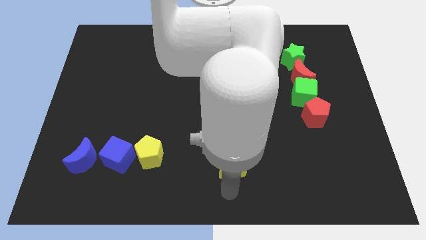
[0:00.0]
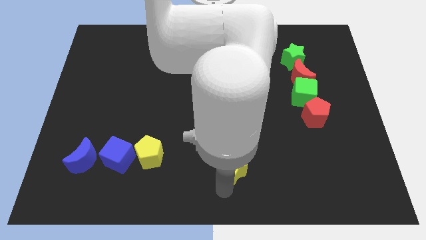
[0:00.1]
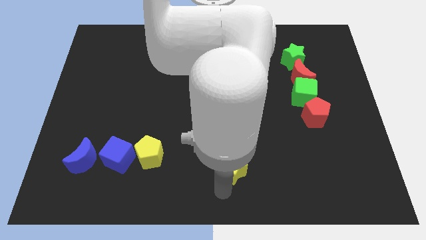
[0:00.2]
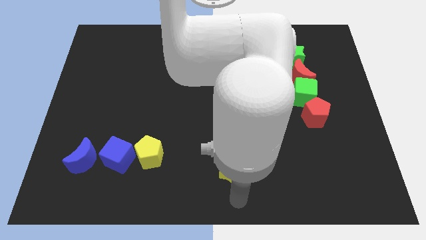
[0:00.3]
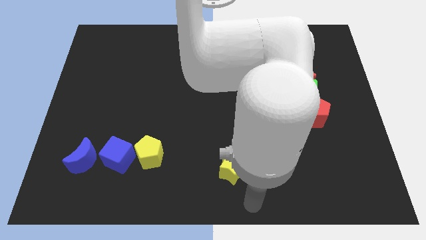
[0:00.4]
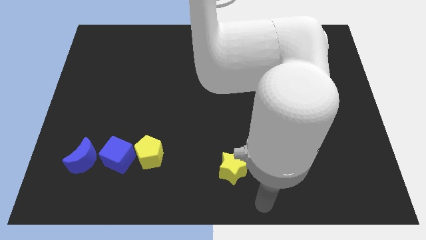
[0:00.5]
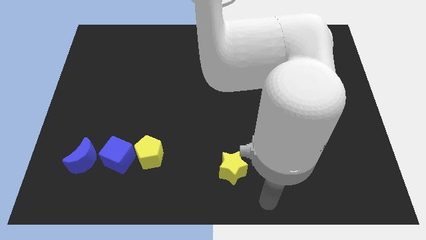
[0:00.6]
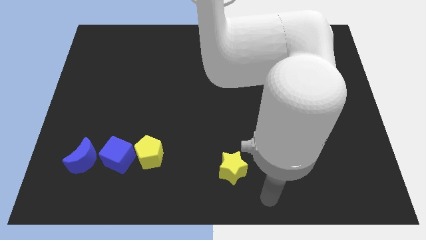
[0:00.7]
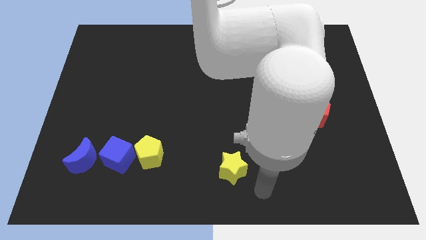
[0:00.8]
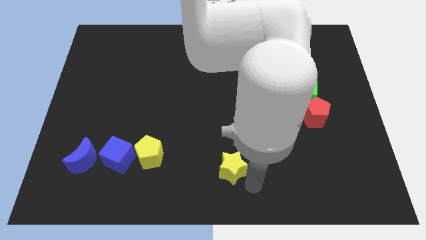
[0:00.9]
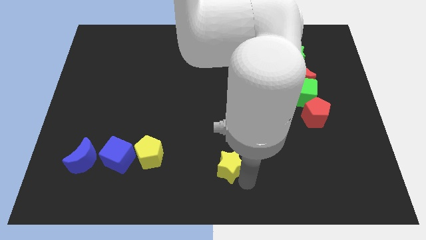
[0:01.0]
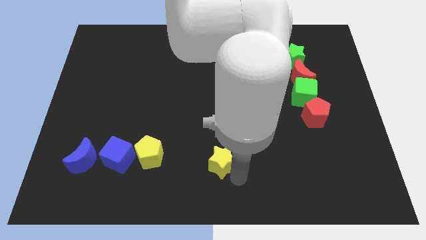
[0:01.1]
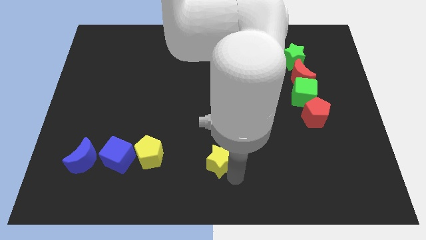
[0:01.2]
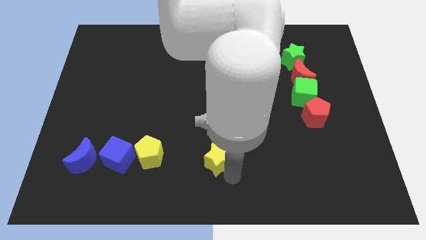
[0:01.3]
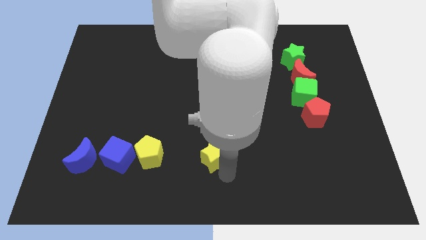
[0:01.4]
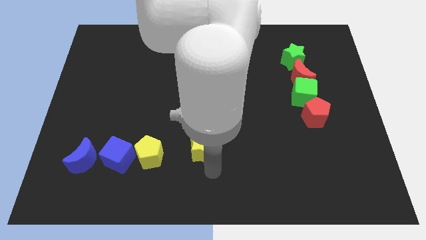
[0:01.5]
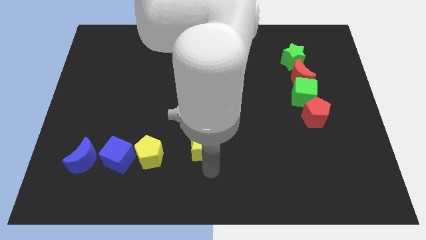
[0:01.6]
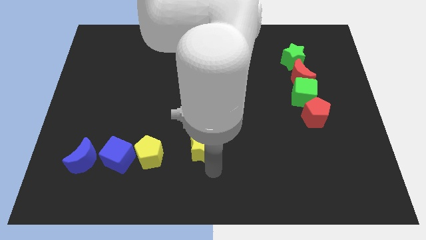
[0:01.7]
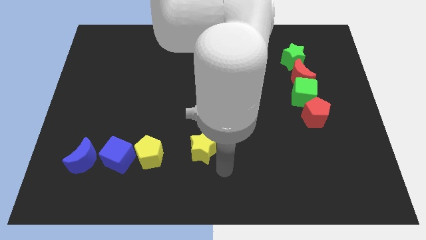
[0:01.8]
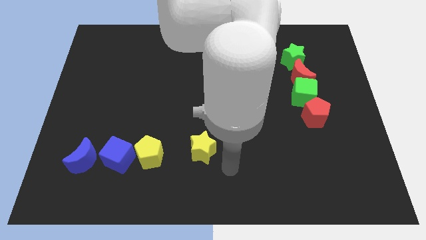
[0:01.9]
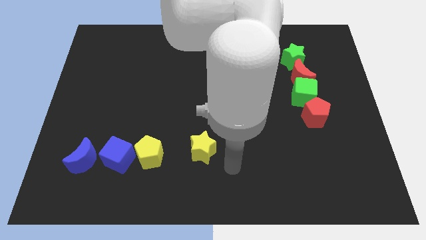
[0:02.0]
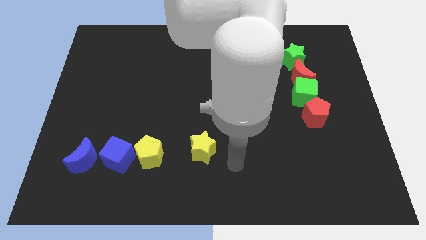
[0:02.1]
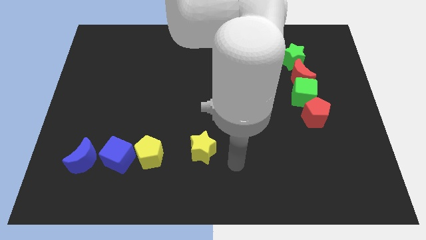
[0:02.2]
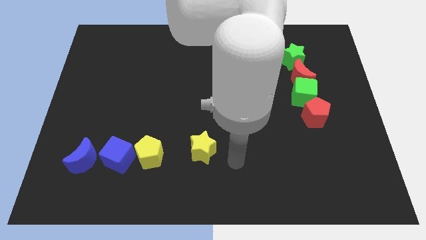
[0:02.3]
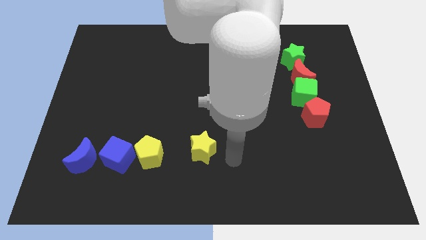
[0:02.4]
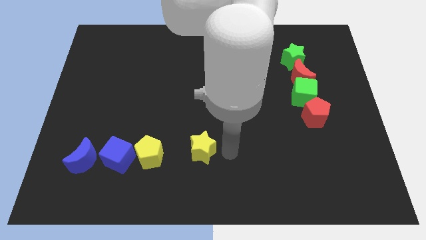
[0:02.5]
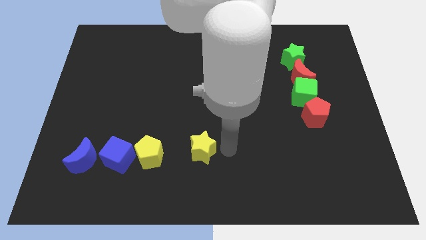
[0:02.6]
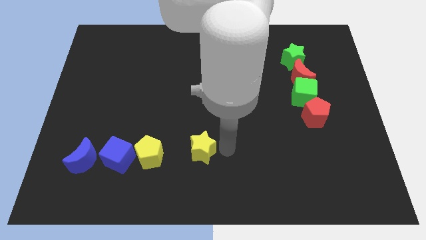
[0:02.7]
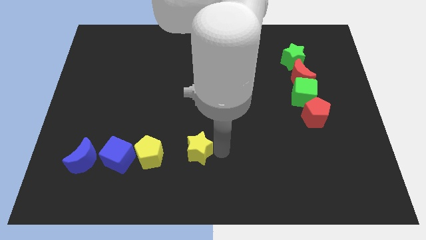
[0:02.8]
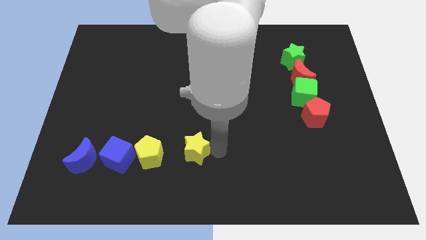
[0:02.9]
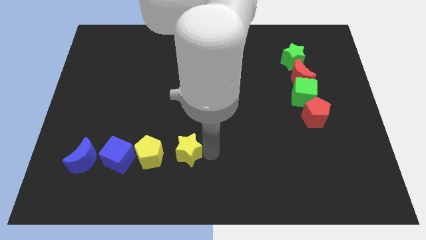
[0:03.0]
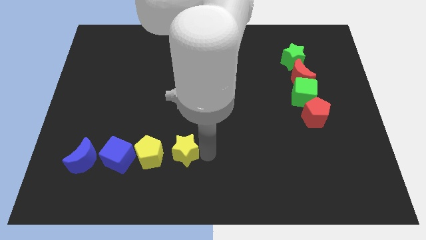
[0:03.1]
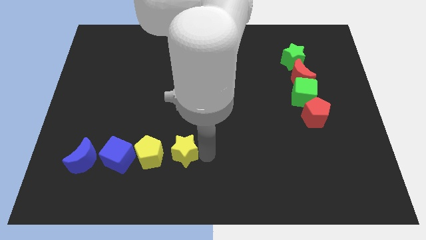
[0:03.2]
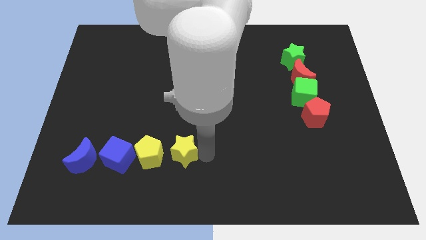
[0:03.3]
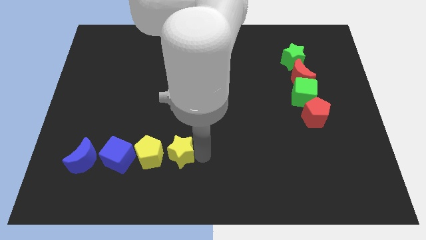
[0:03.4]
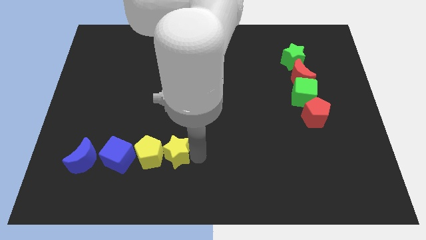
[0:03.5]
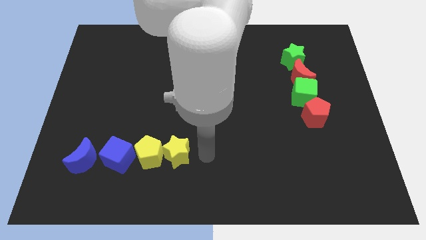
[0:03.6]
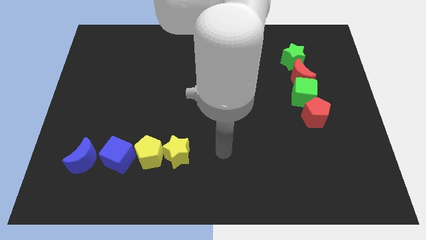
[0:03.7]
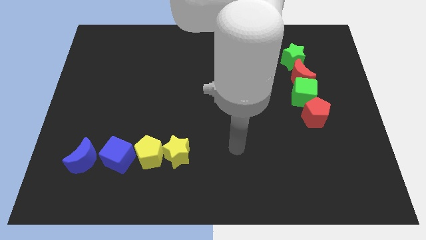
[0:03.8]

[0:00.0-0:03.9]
move the yellow star to the right of the yellow pentagon

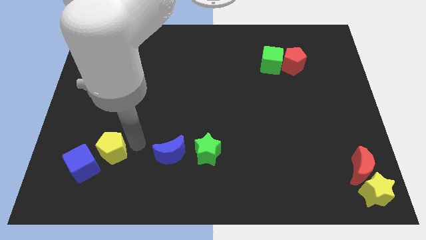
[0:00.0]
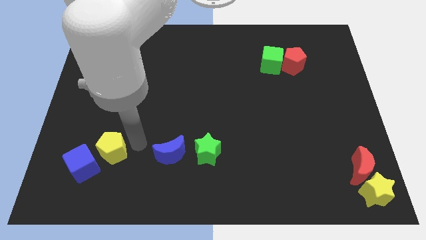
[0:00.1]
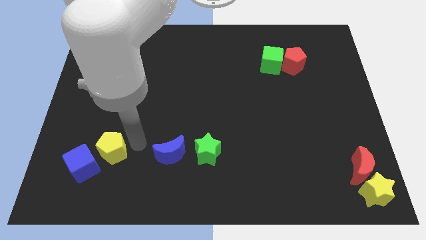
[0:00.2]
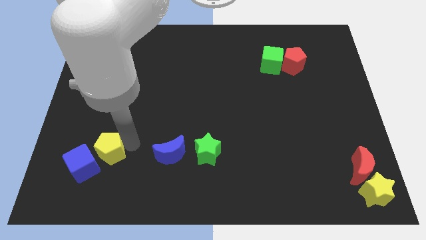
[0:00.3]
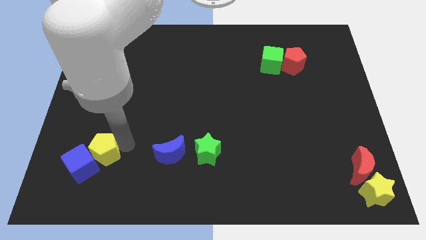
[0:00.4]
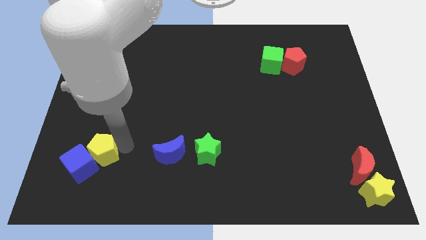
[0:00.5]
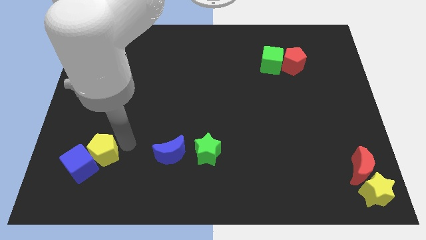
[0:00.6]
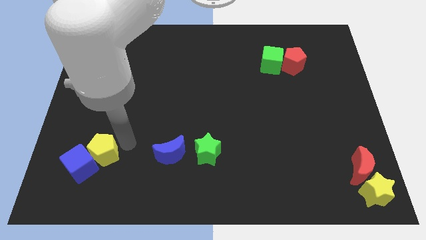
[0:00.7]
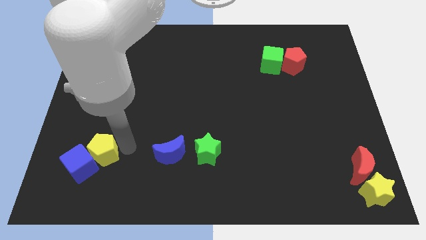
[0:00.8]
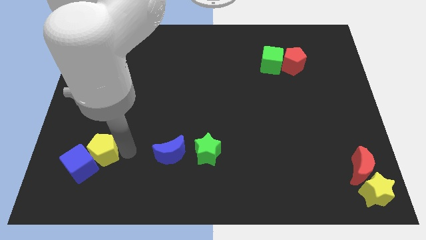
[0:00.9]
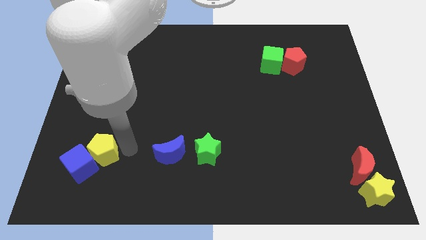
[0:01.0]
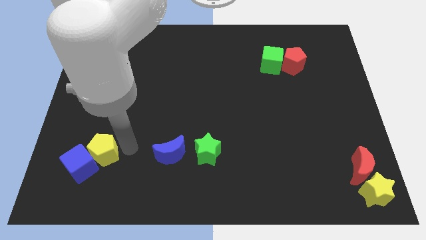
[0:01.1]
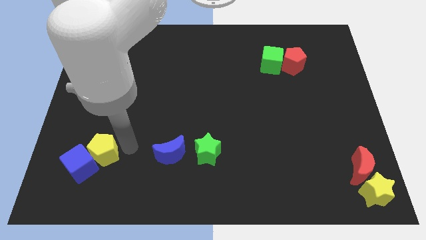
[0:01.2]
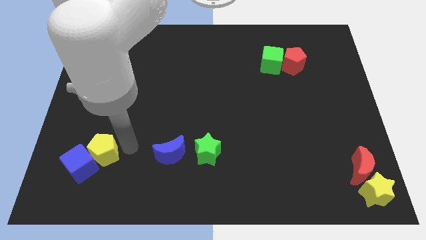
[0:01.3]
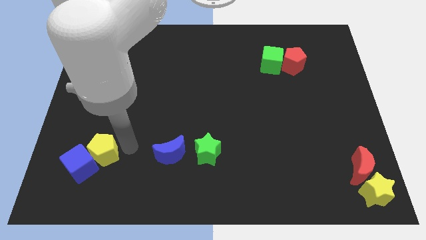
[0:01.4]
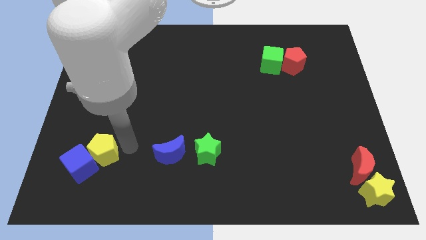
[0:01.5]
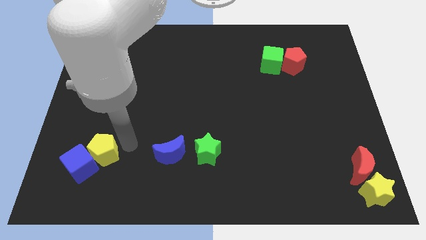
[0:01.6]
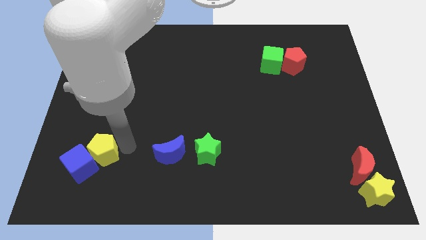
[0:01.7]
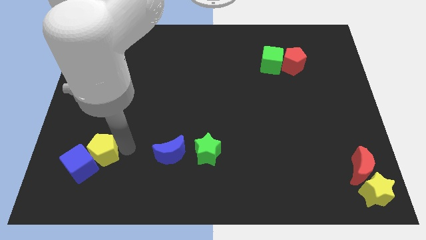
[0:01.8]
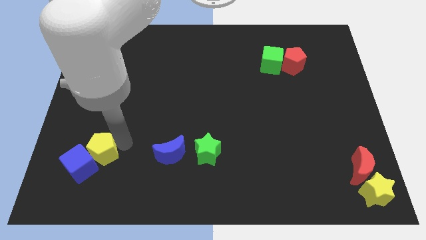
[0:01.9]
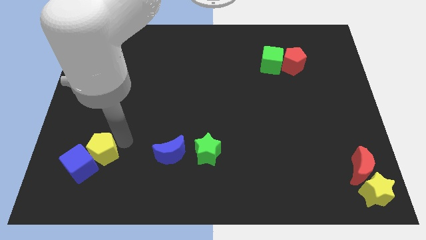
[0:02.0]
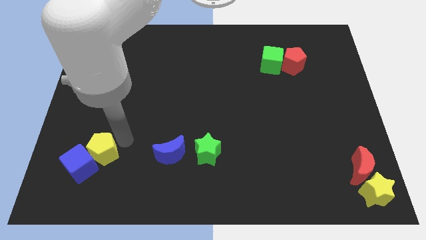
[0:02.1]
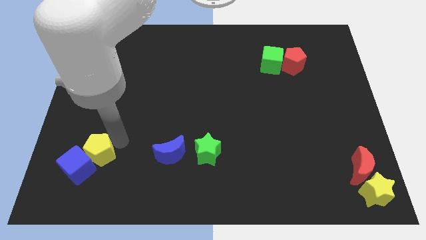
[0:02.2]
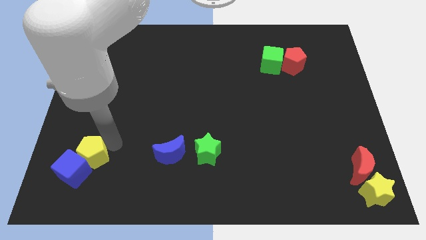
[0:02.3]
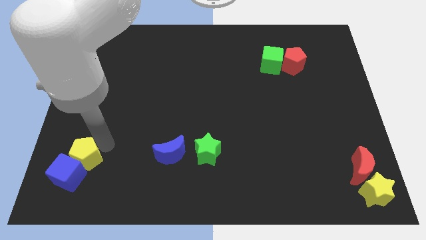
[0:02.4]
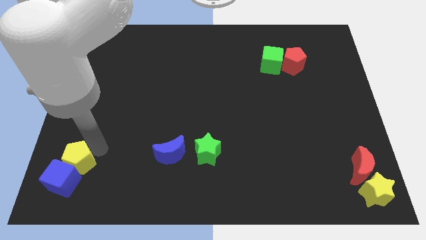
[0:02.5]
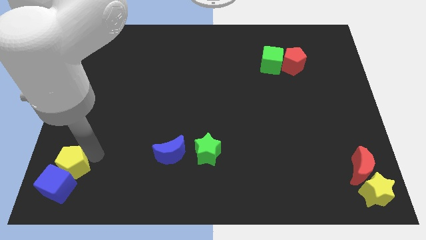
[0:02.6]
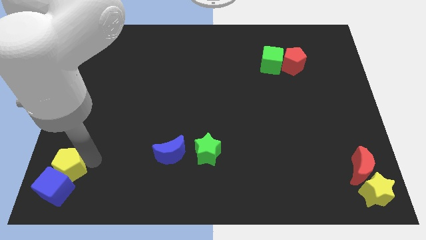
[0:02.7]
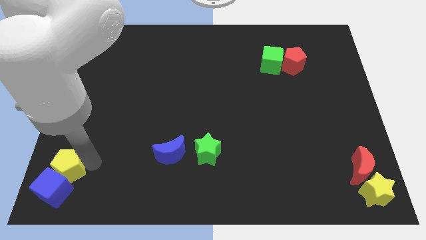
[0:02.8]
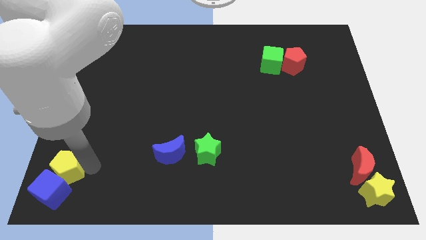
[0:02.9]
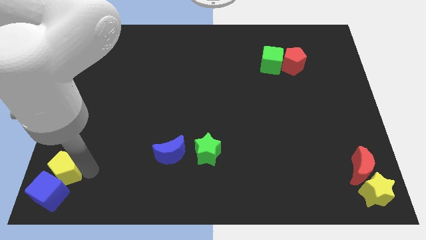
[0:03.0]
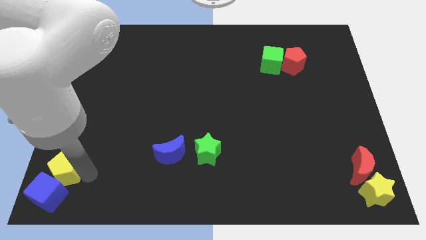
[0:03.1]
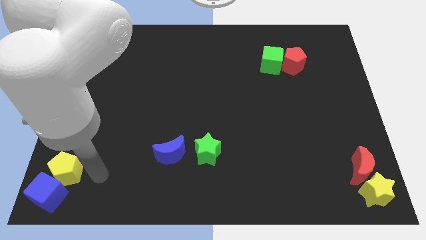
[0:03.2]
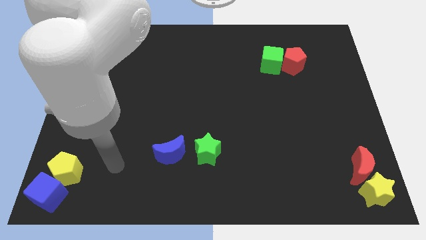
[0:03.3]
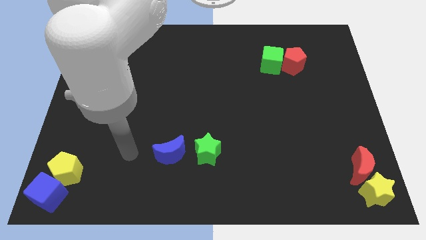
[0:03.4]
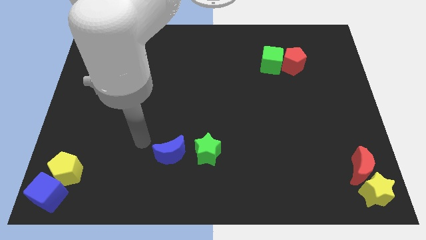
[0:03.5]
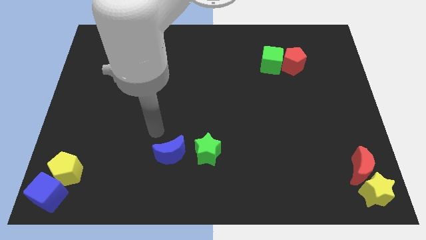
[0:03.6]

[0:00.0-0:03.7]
push the yellow pentagon and blue cube towards bottom left corner

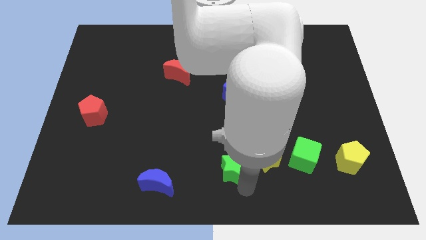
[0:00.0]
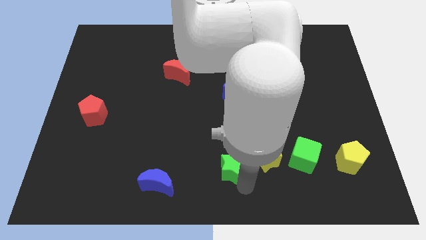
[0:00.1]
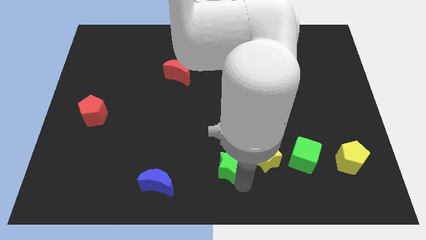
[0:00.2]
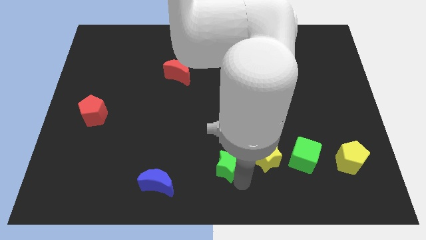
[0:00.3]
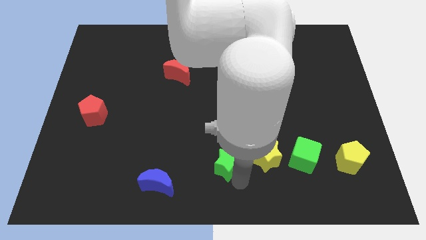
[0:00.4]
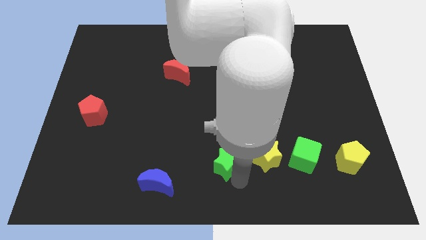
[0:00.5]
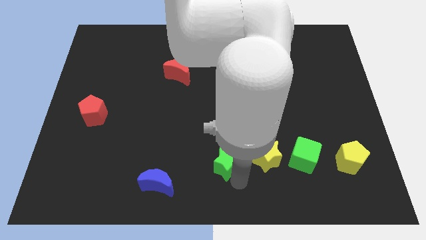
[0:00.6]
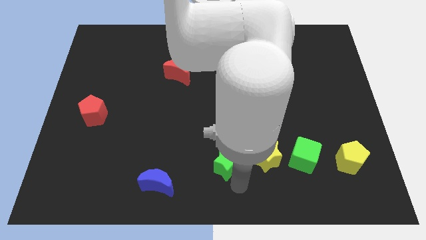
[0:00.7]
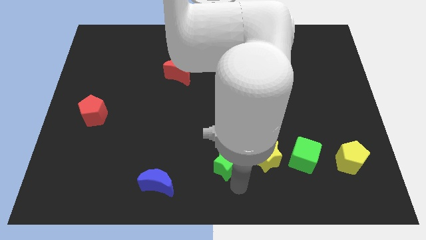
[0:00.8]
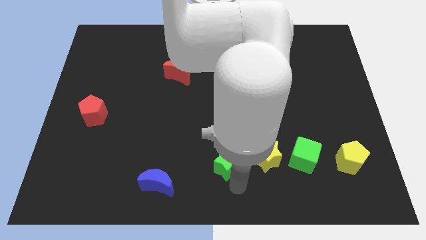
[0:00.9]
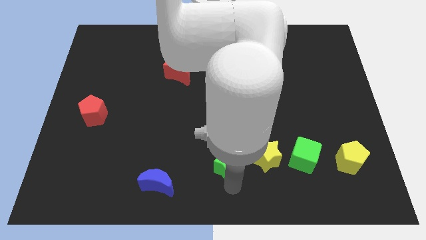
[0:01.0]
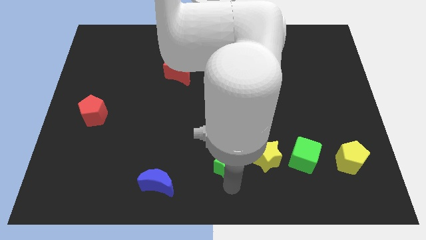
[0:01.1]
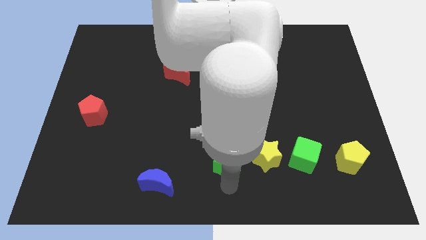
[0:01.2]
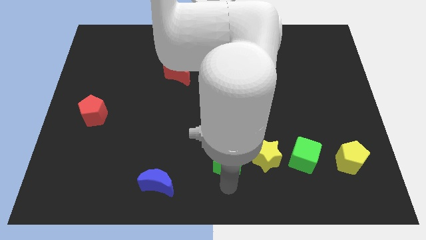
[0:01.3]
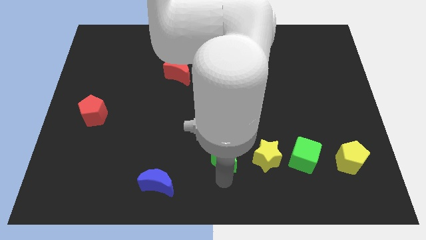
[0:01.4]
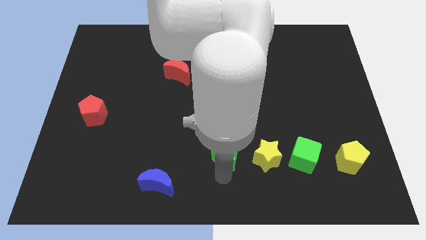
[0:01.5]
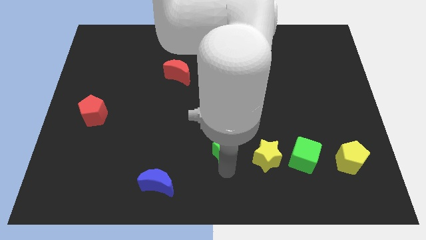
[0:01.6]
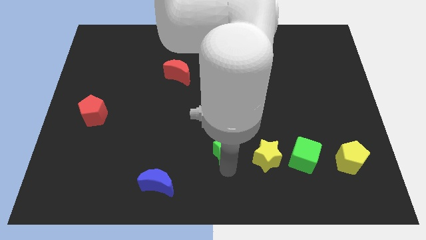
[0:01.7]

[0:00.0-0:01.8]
move the green star diagonal to the left of the yellow star
